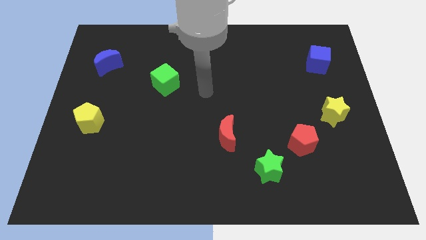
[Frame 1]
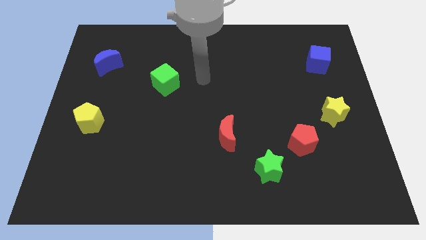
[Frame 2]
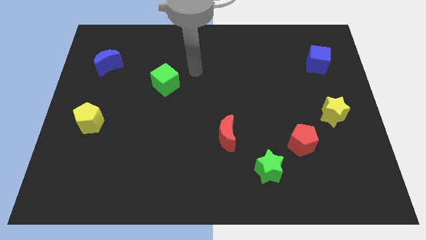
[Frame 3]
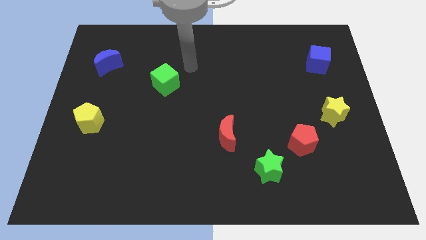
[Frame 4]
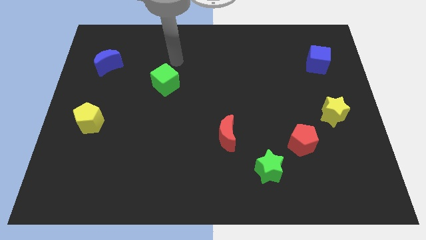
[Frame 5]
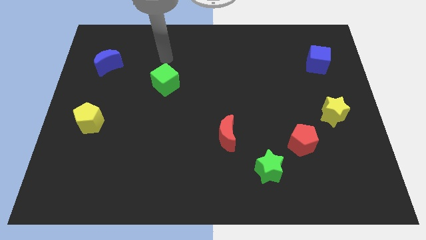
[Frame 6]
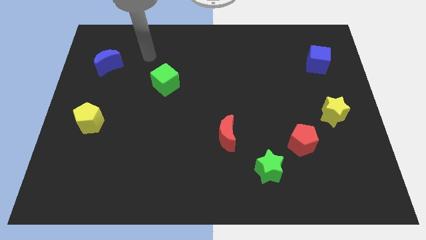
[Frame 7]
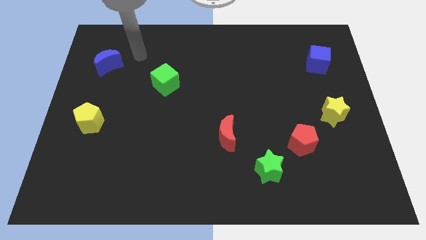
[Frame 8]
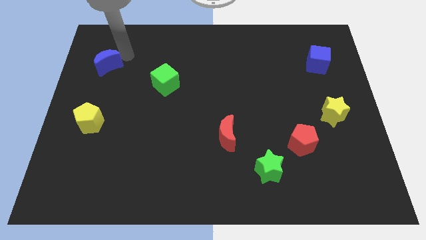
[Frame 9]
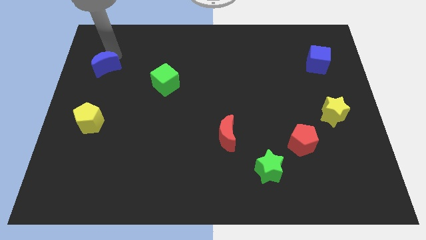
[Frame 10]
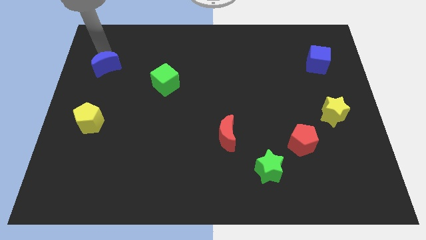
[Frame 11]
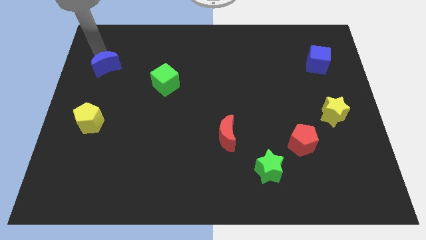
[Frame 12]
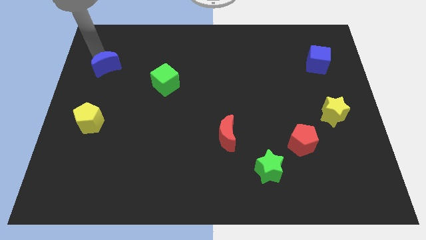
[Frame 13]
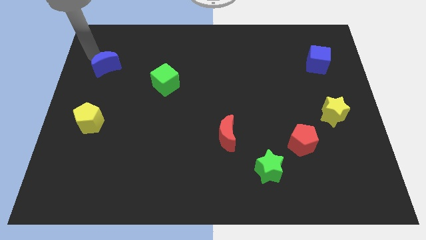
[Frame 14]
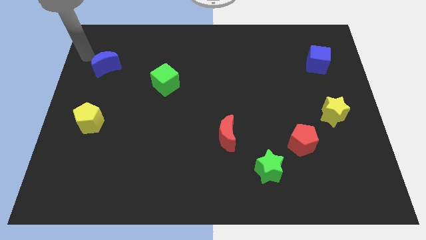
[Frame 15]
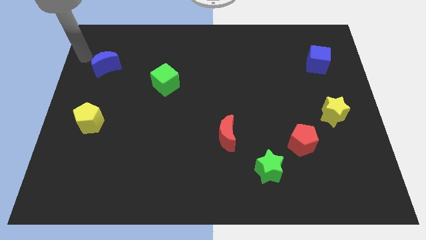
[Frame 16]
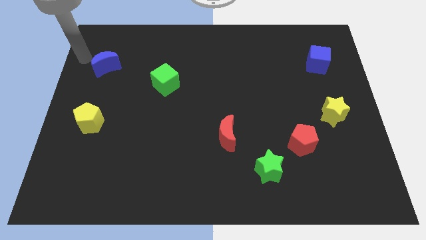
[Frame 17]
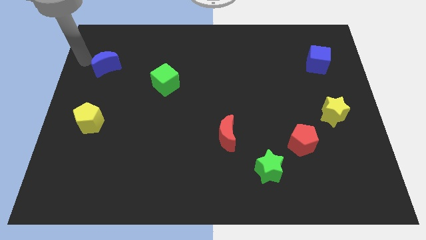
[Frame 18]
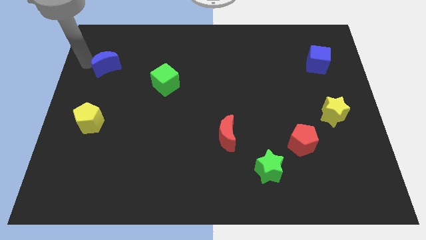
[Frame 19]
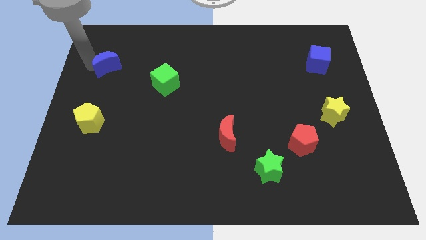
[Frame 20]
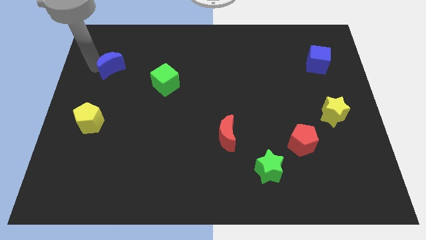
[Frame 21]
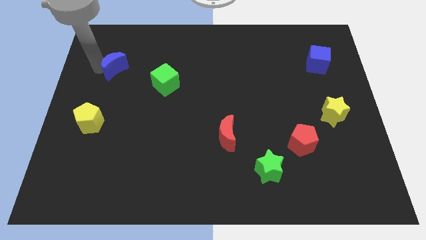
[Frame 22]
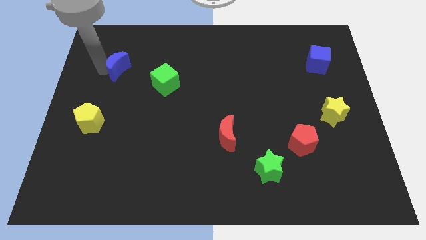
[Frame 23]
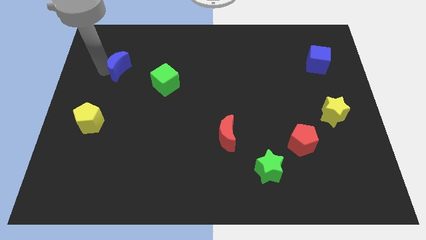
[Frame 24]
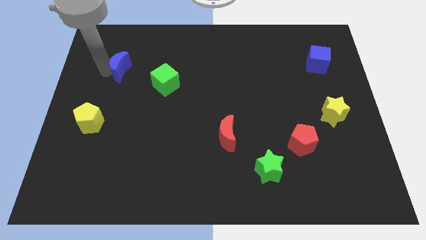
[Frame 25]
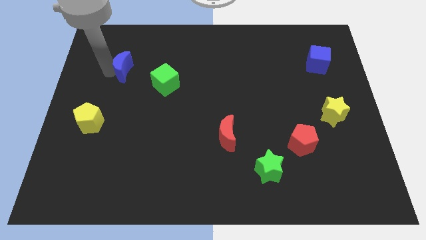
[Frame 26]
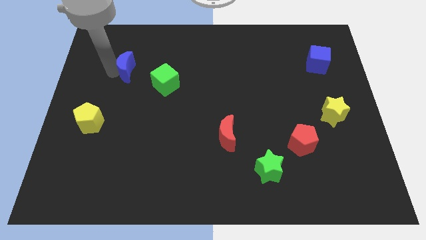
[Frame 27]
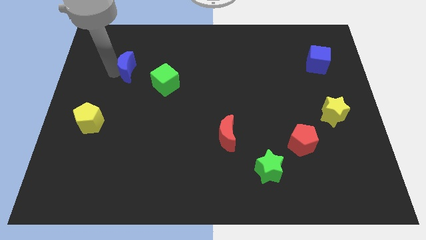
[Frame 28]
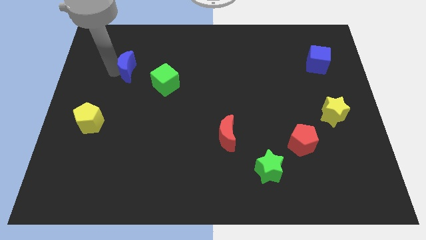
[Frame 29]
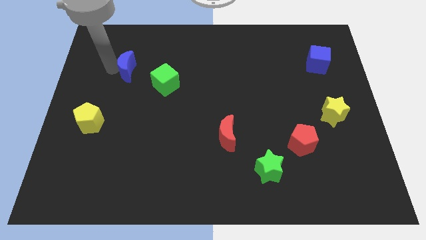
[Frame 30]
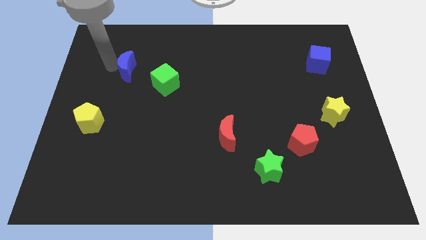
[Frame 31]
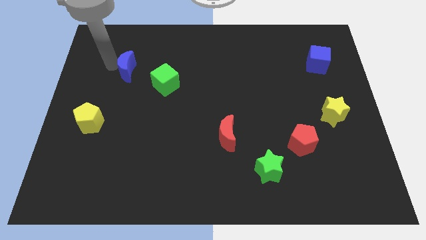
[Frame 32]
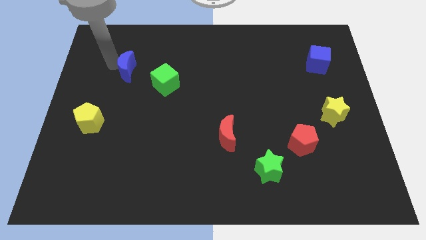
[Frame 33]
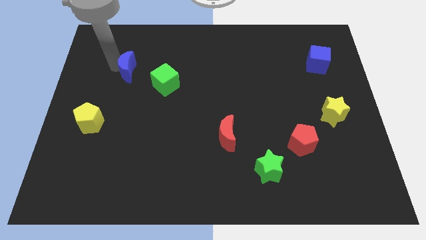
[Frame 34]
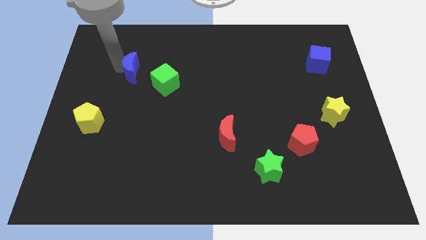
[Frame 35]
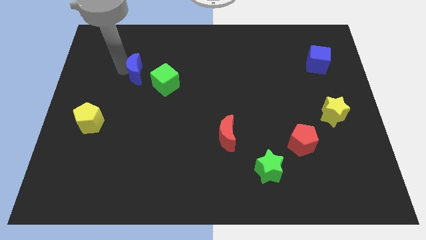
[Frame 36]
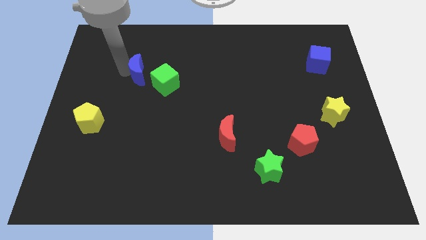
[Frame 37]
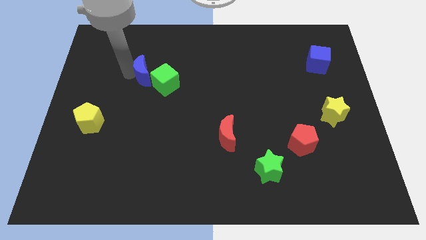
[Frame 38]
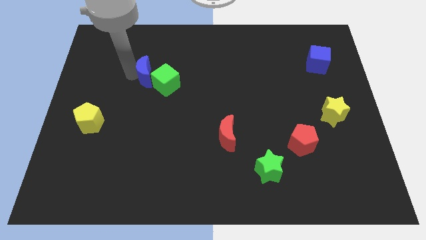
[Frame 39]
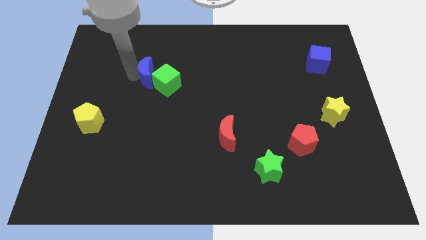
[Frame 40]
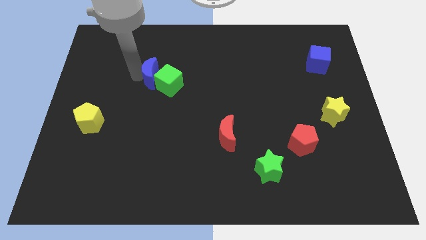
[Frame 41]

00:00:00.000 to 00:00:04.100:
push the blue moon next to the green cube

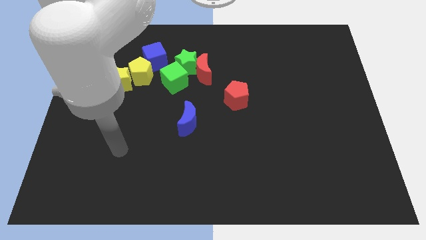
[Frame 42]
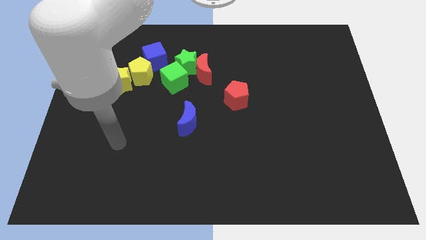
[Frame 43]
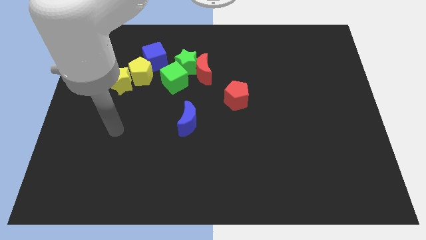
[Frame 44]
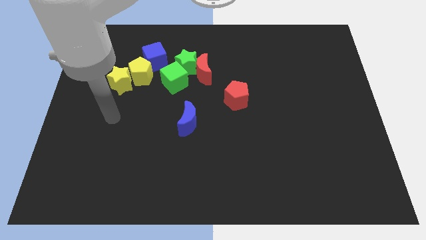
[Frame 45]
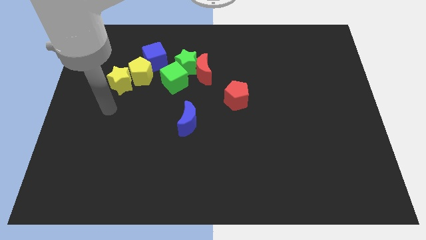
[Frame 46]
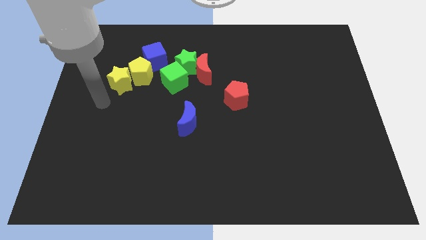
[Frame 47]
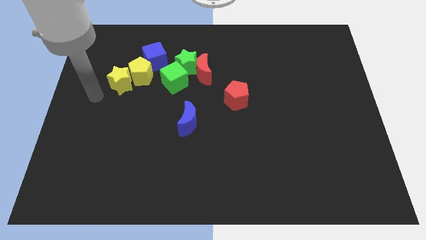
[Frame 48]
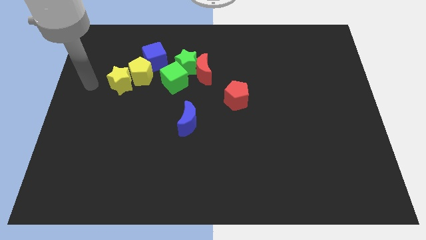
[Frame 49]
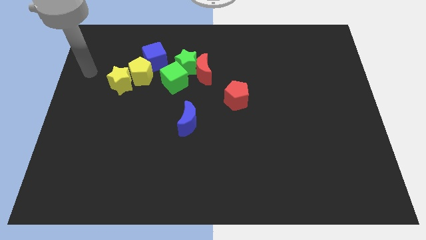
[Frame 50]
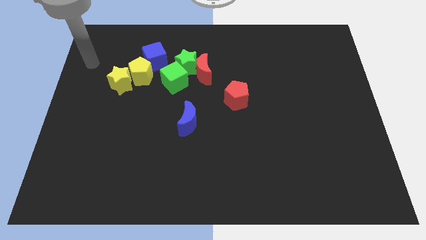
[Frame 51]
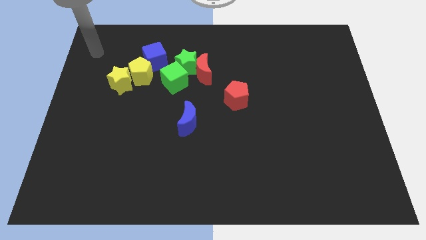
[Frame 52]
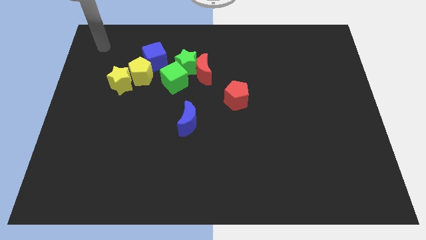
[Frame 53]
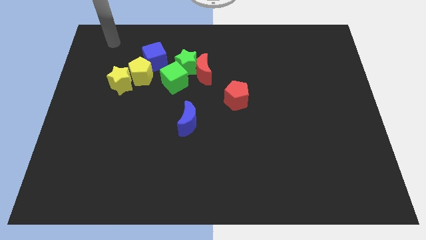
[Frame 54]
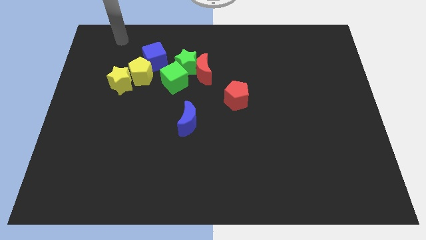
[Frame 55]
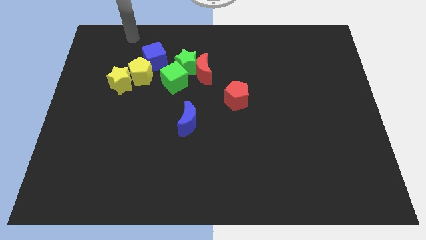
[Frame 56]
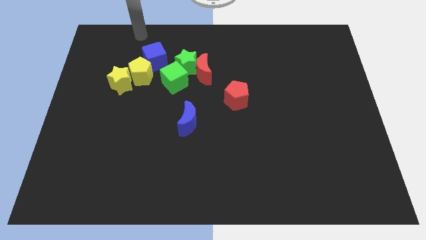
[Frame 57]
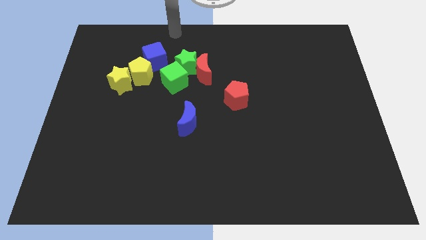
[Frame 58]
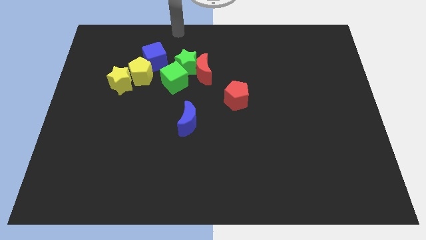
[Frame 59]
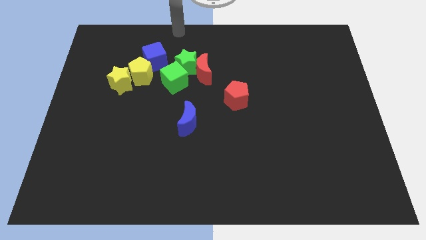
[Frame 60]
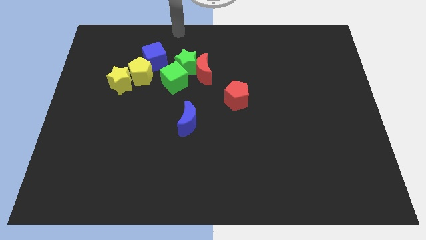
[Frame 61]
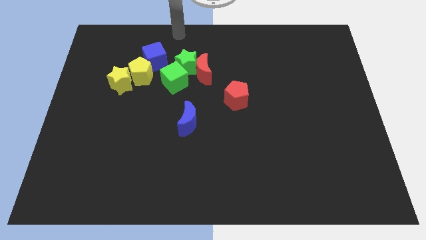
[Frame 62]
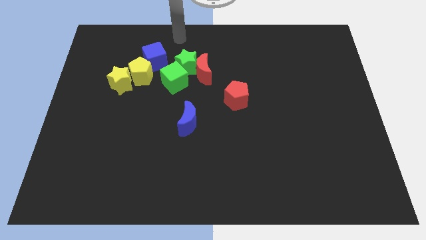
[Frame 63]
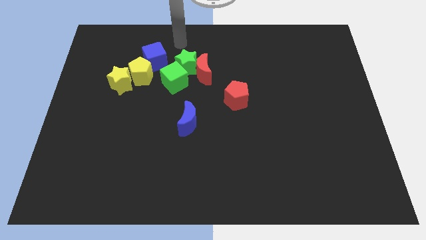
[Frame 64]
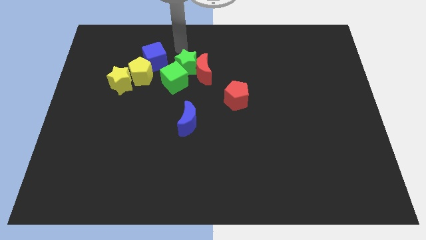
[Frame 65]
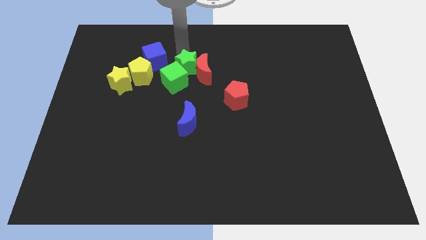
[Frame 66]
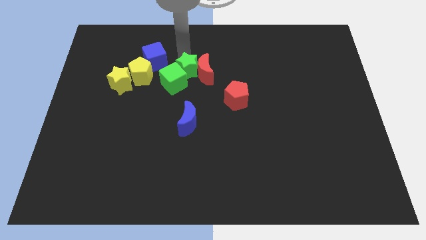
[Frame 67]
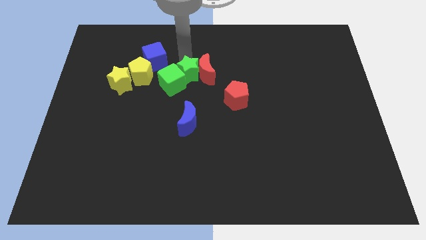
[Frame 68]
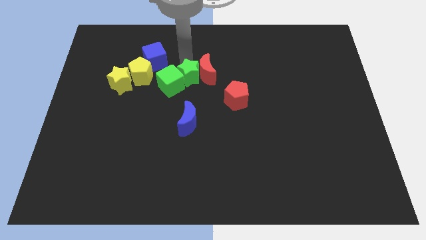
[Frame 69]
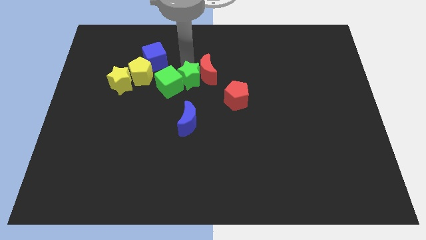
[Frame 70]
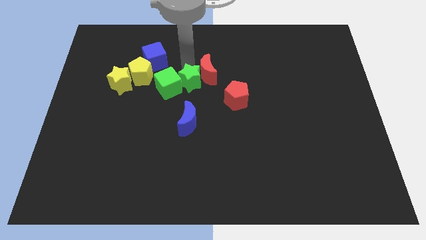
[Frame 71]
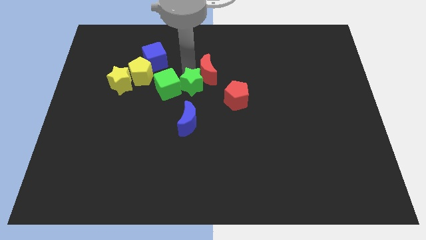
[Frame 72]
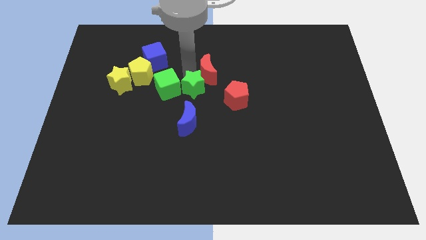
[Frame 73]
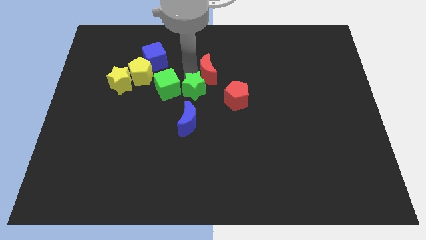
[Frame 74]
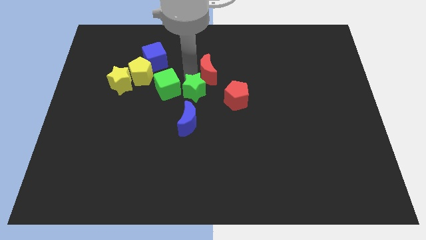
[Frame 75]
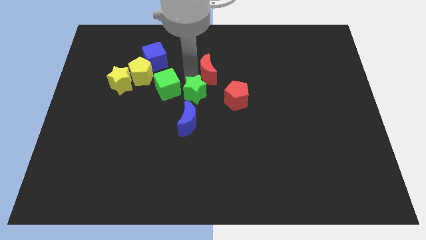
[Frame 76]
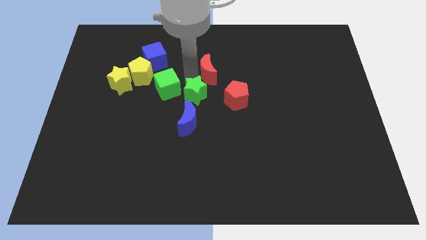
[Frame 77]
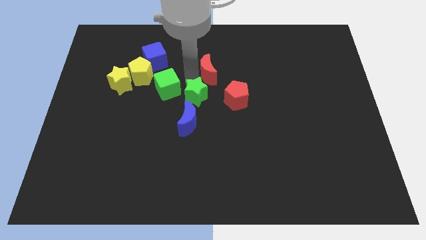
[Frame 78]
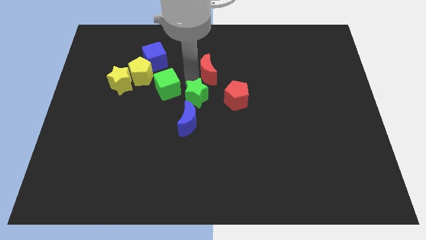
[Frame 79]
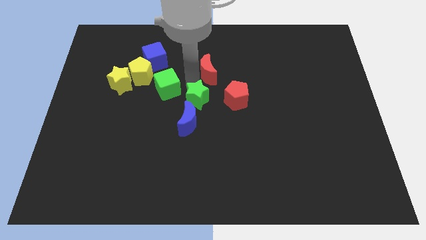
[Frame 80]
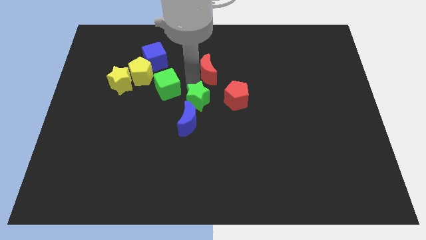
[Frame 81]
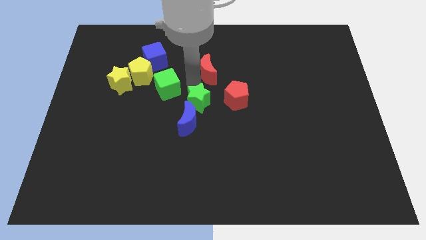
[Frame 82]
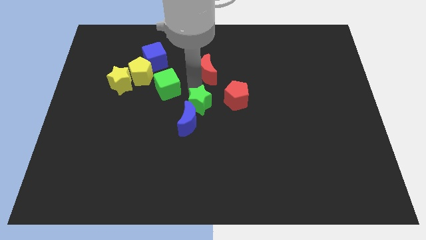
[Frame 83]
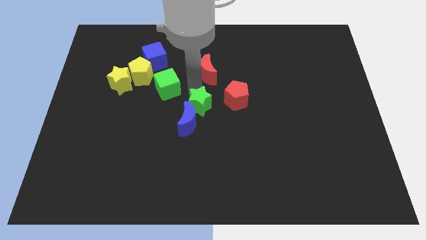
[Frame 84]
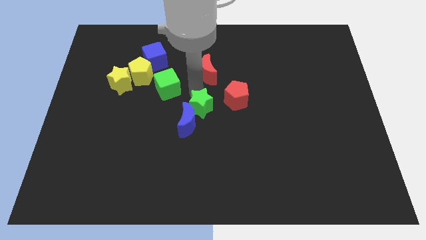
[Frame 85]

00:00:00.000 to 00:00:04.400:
put the green star next to the blue moon
